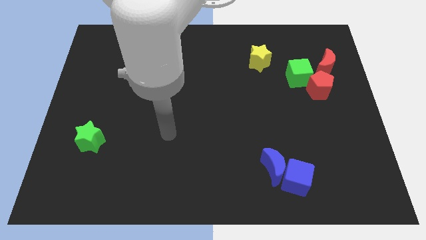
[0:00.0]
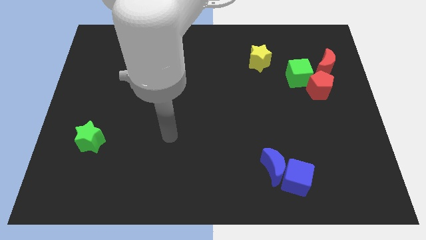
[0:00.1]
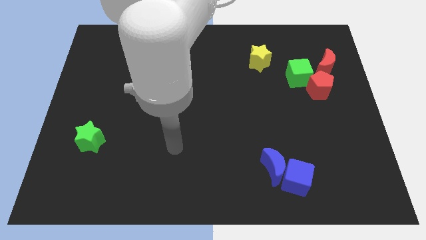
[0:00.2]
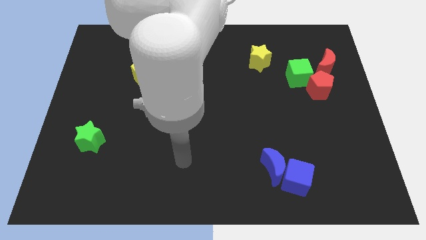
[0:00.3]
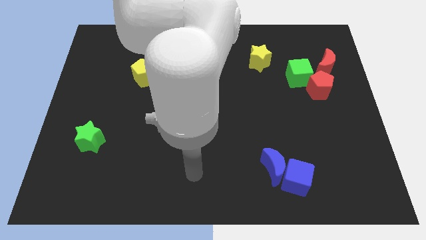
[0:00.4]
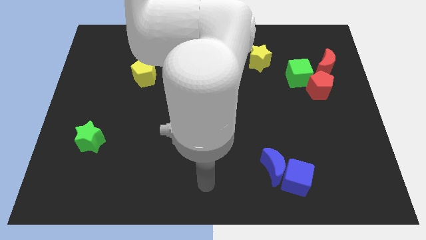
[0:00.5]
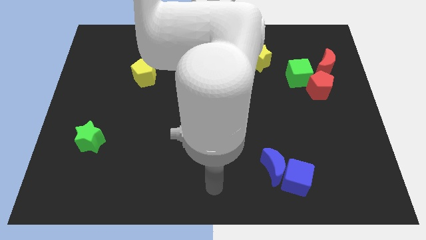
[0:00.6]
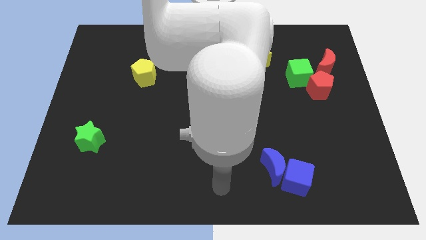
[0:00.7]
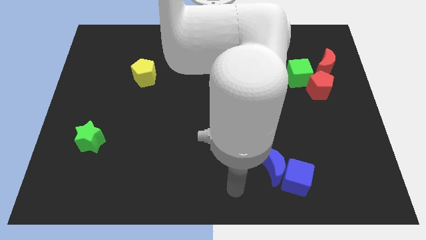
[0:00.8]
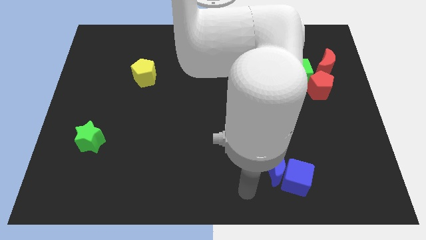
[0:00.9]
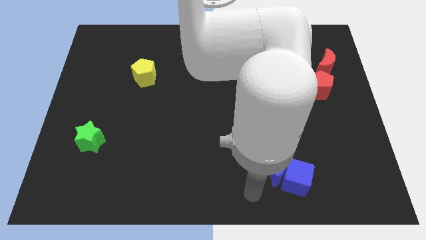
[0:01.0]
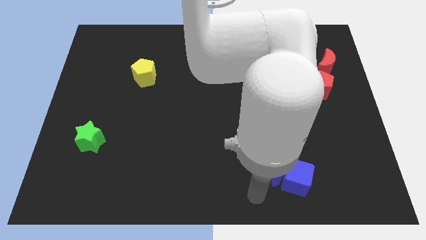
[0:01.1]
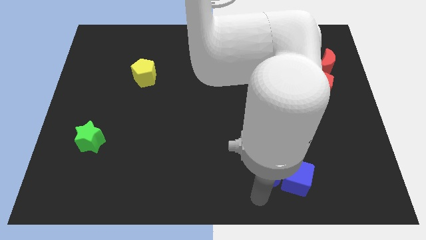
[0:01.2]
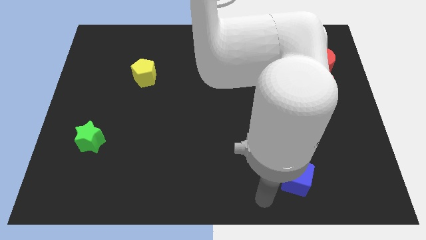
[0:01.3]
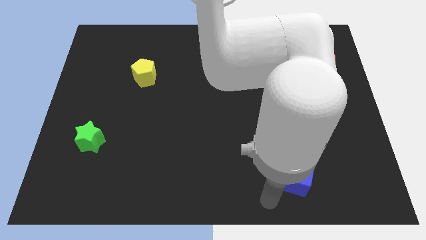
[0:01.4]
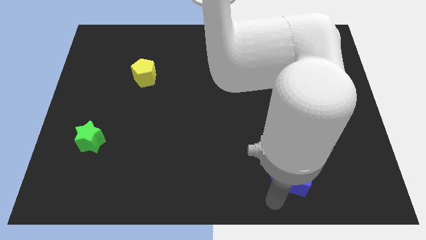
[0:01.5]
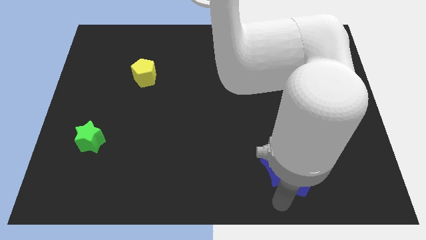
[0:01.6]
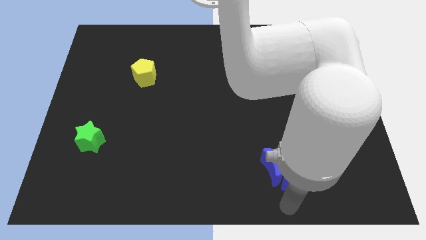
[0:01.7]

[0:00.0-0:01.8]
slide your arm below the blue crescent

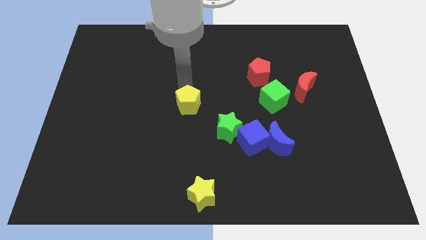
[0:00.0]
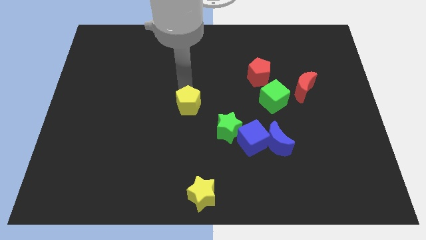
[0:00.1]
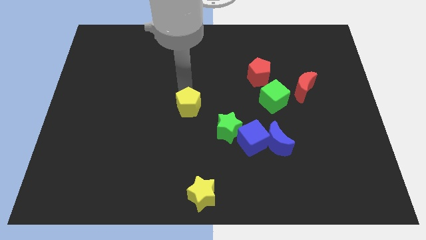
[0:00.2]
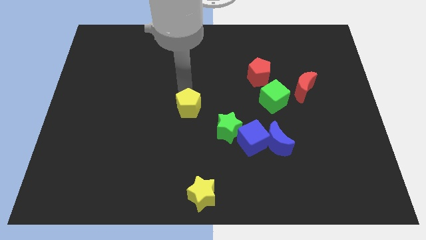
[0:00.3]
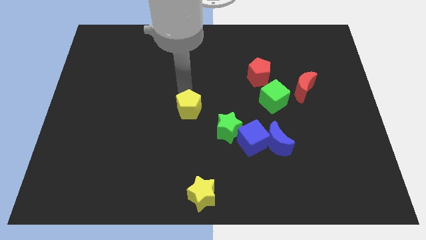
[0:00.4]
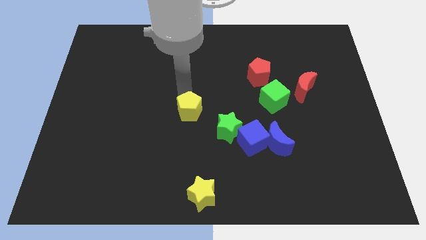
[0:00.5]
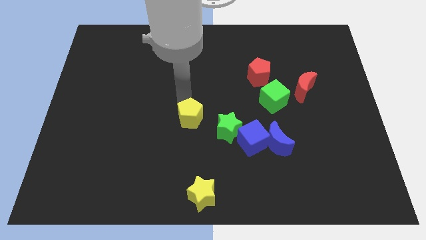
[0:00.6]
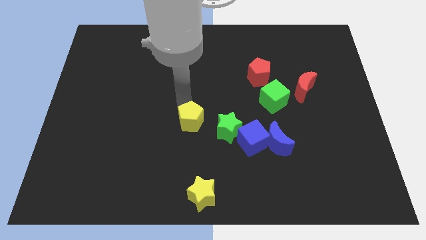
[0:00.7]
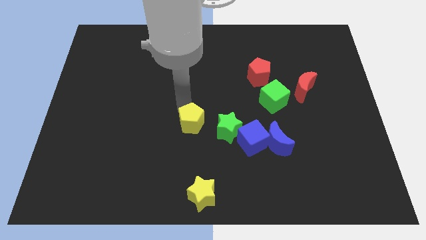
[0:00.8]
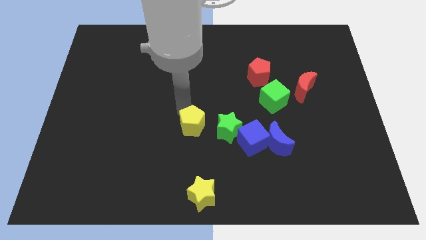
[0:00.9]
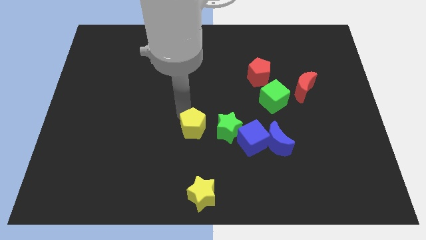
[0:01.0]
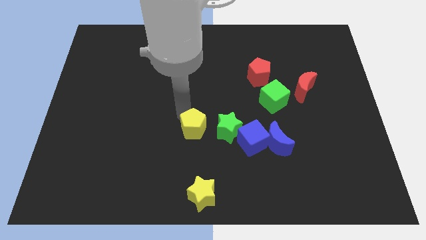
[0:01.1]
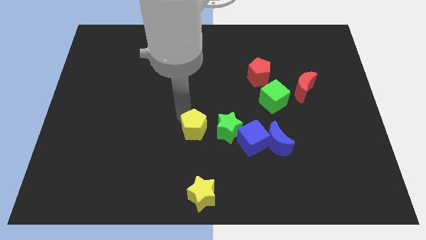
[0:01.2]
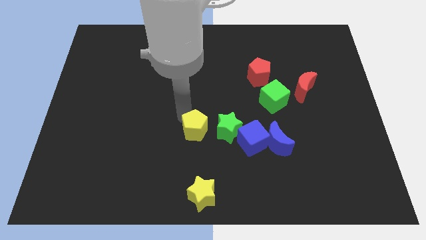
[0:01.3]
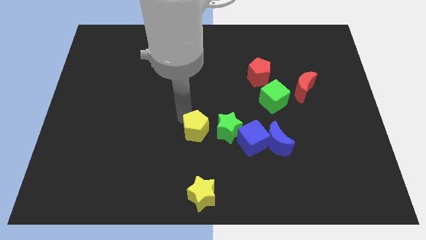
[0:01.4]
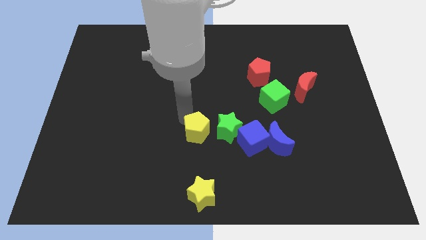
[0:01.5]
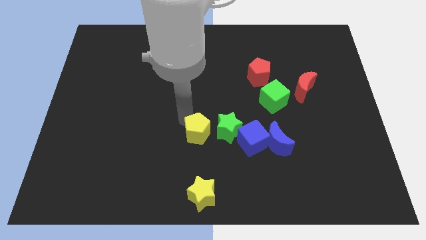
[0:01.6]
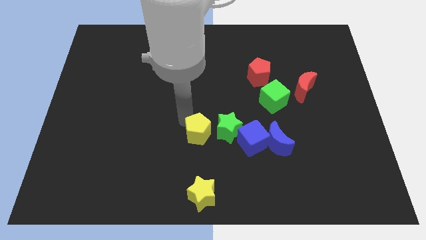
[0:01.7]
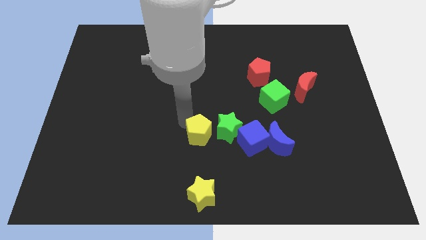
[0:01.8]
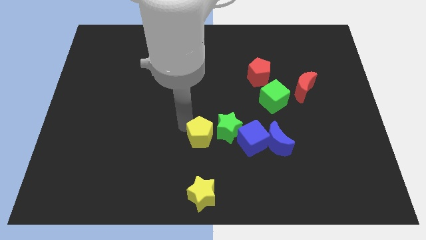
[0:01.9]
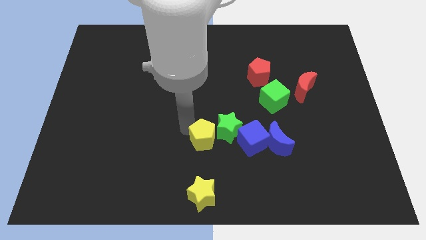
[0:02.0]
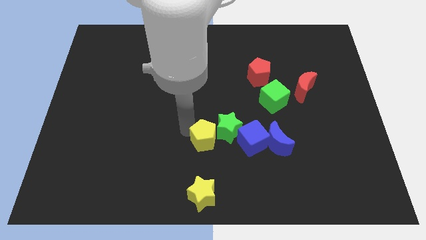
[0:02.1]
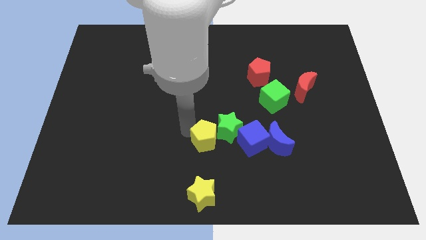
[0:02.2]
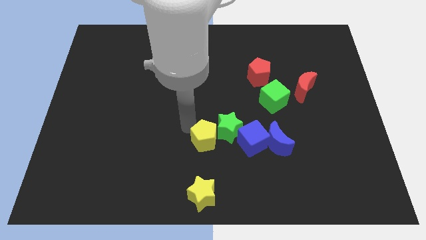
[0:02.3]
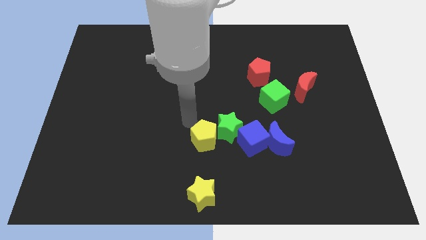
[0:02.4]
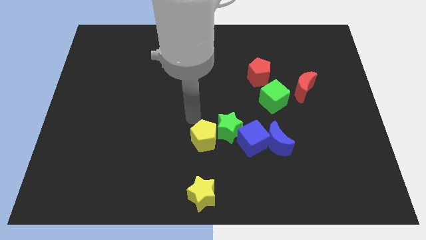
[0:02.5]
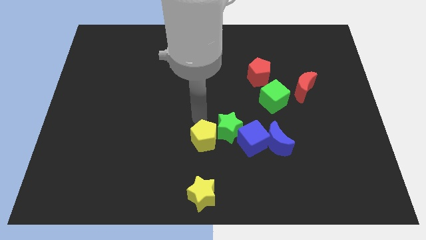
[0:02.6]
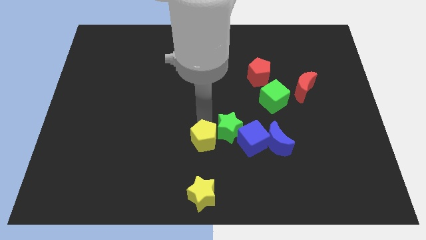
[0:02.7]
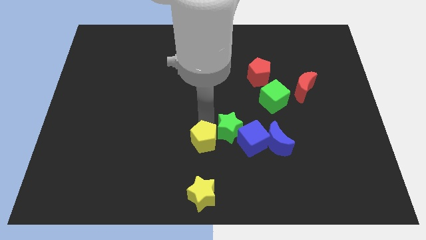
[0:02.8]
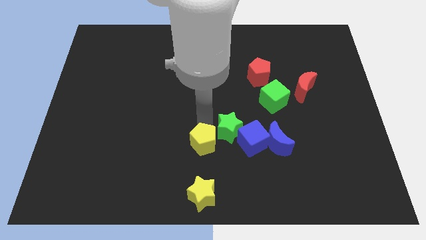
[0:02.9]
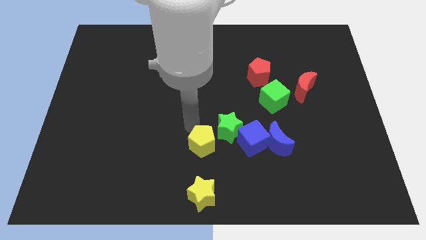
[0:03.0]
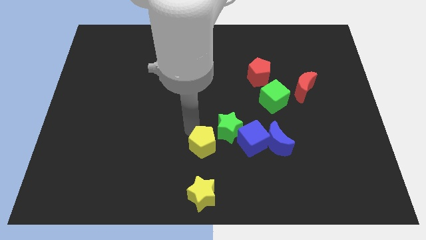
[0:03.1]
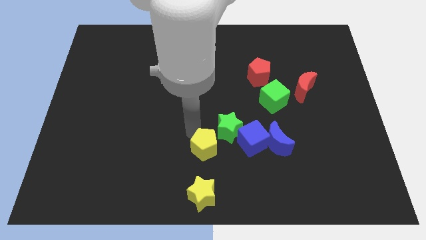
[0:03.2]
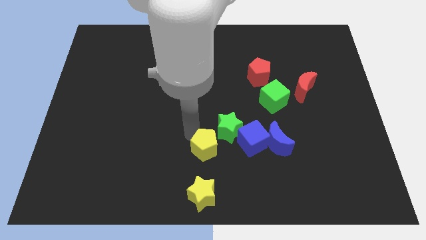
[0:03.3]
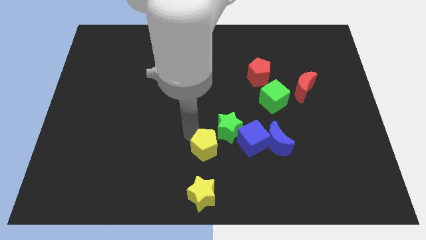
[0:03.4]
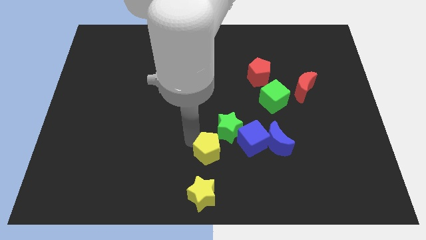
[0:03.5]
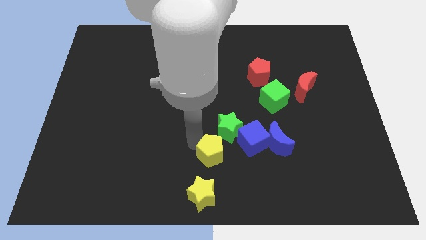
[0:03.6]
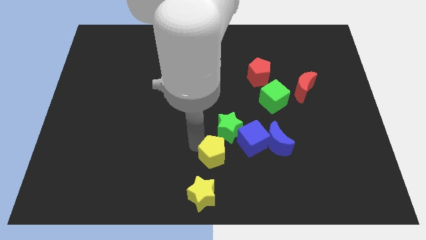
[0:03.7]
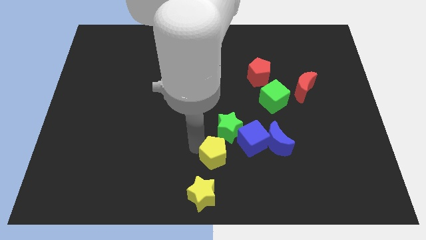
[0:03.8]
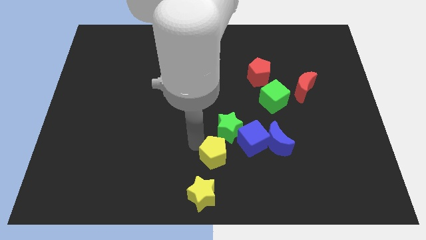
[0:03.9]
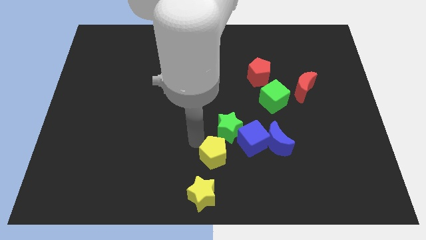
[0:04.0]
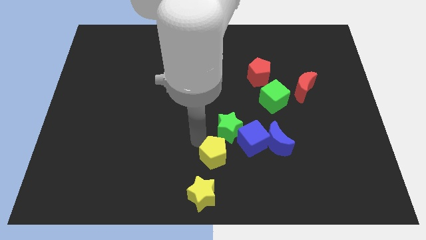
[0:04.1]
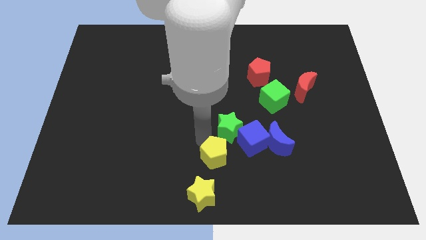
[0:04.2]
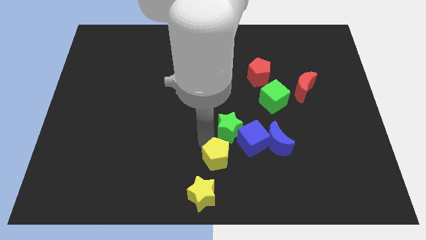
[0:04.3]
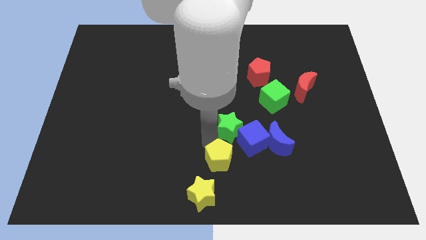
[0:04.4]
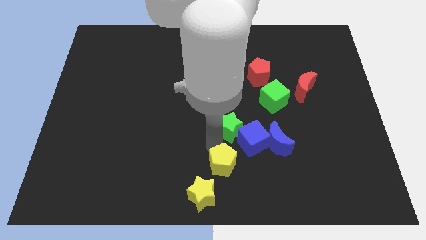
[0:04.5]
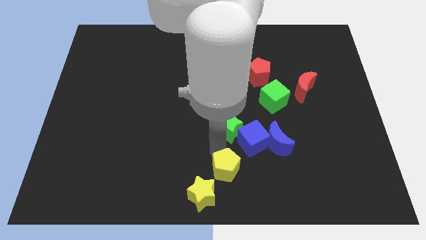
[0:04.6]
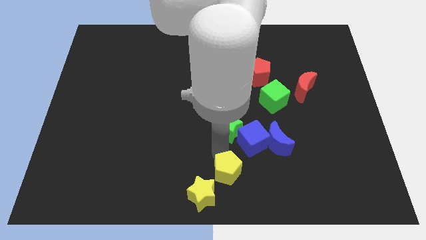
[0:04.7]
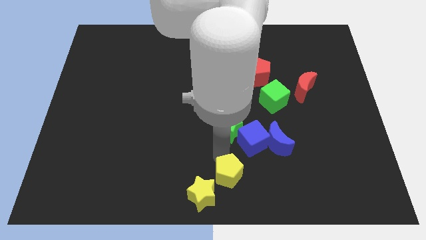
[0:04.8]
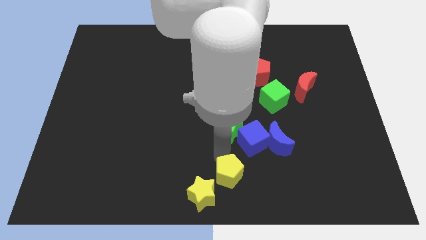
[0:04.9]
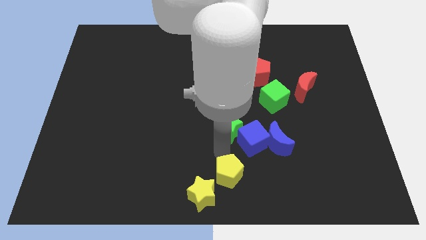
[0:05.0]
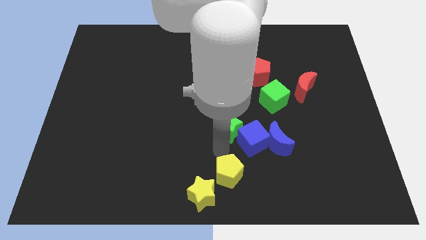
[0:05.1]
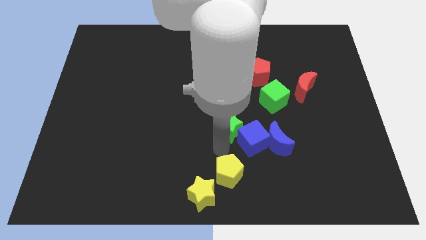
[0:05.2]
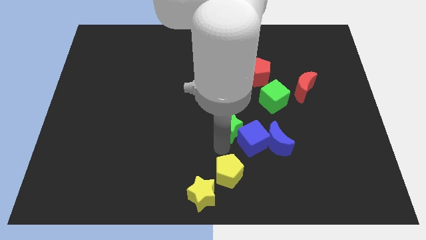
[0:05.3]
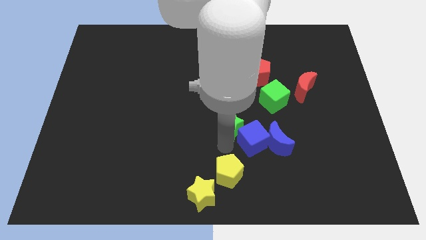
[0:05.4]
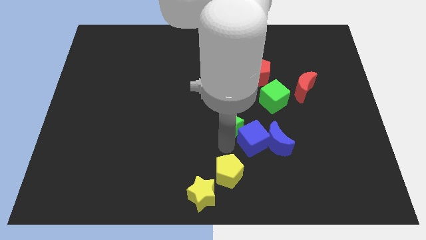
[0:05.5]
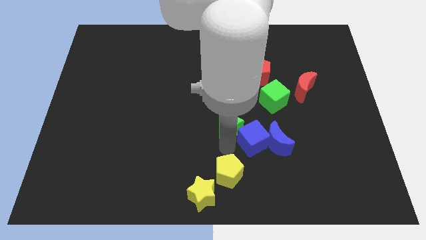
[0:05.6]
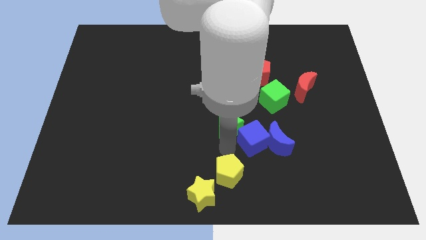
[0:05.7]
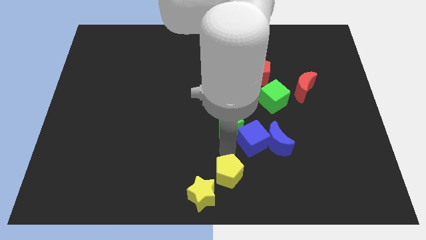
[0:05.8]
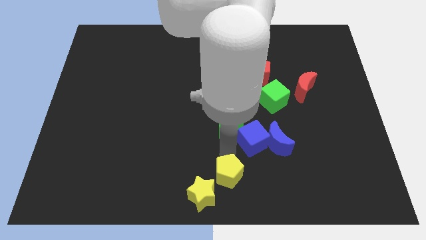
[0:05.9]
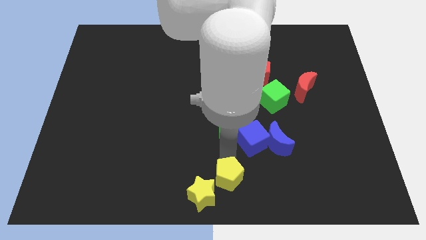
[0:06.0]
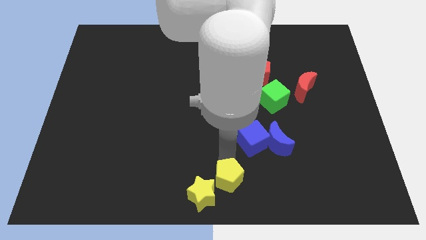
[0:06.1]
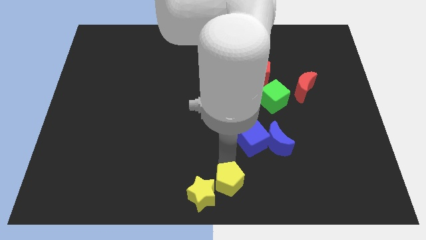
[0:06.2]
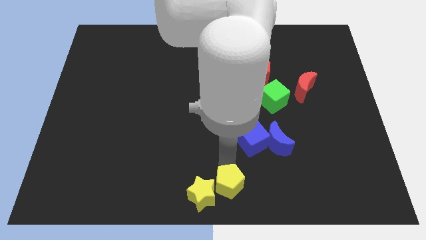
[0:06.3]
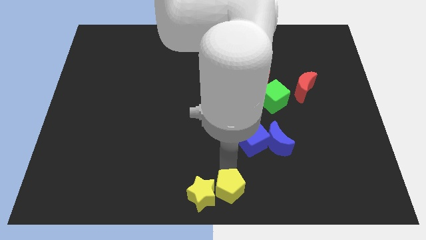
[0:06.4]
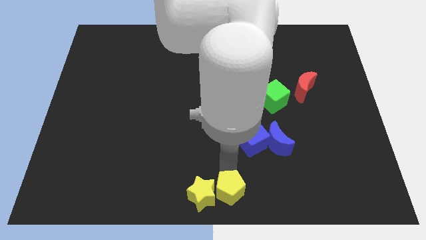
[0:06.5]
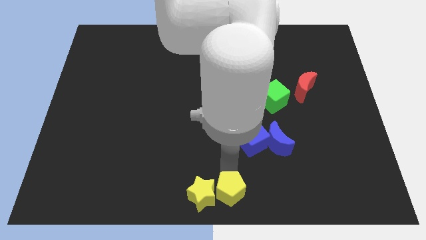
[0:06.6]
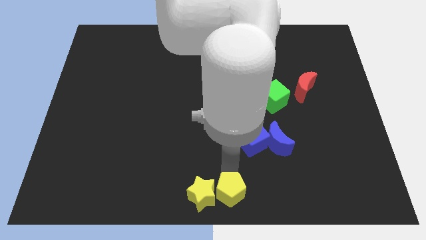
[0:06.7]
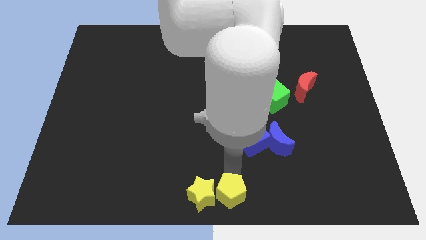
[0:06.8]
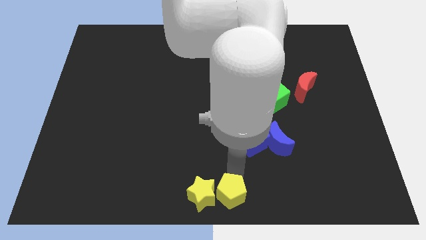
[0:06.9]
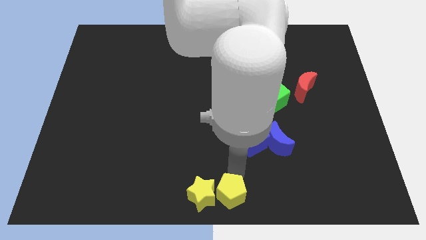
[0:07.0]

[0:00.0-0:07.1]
push the yellow pentagon right to the yellow star

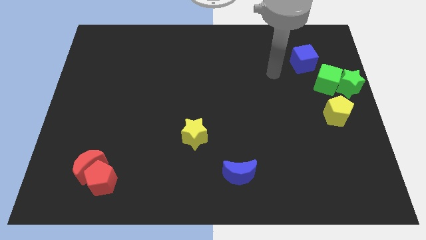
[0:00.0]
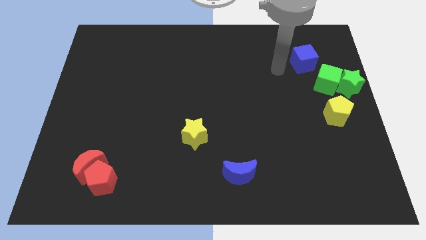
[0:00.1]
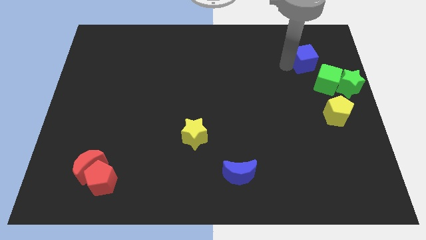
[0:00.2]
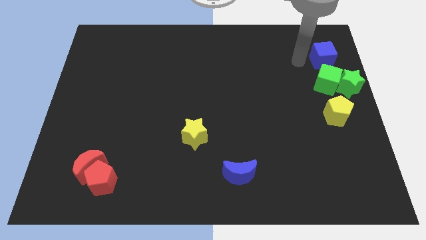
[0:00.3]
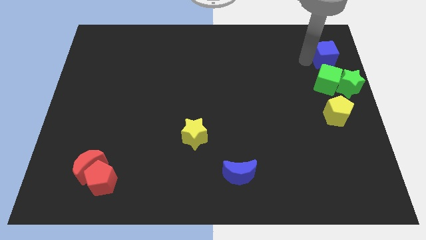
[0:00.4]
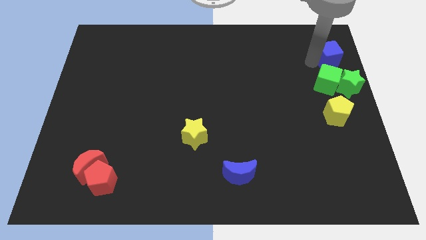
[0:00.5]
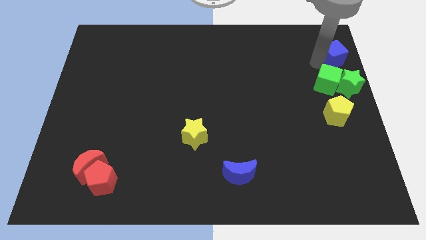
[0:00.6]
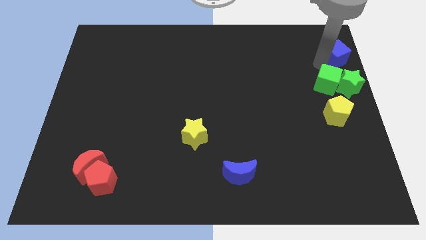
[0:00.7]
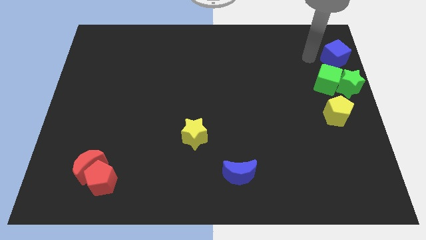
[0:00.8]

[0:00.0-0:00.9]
place the blue cube at the top of green cube
